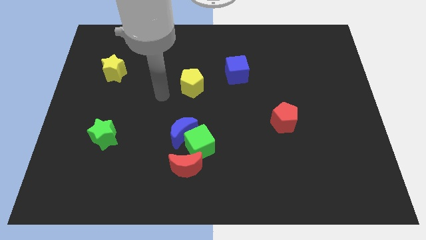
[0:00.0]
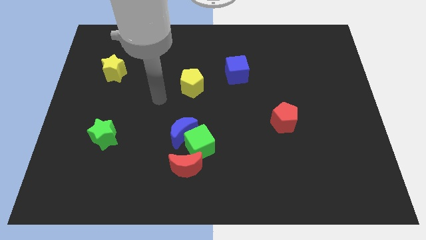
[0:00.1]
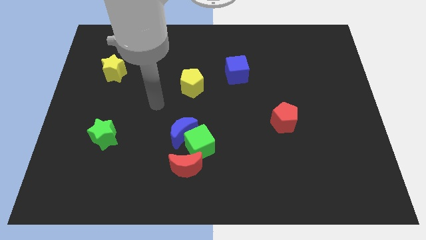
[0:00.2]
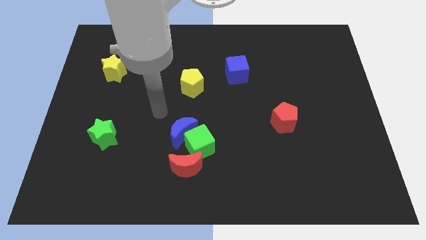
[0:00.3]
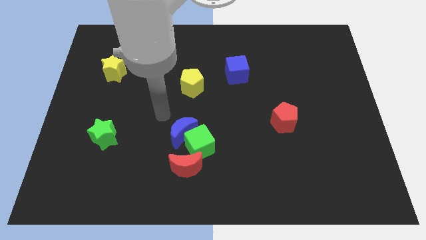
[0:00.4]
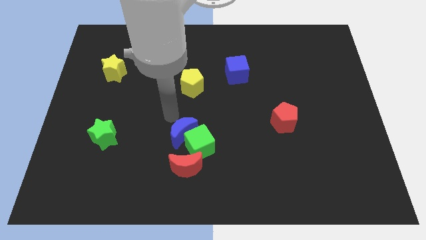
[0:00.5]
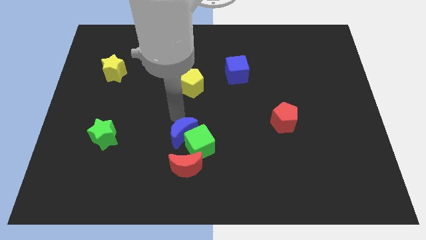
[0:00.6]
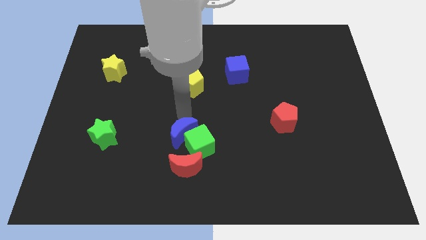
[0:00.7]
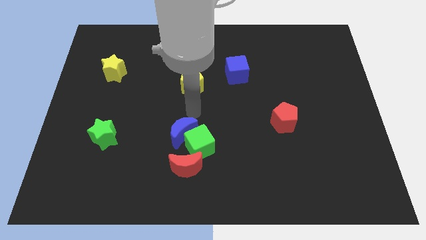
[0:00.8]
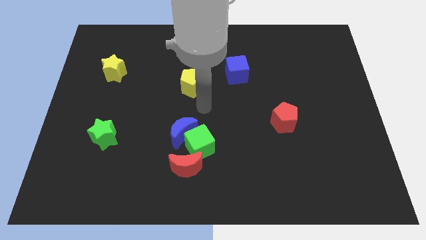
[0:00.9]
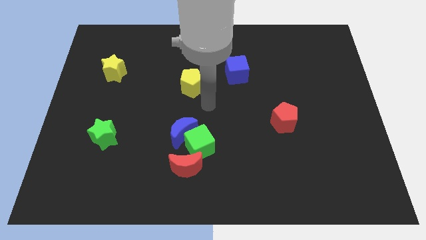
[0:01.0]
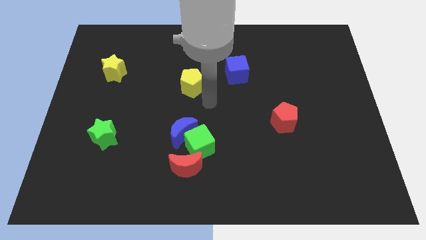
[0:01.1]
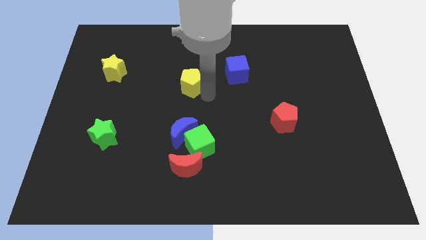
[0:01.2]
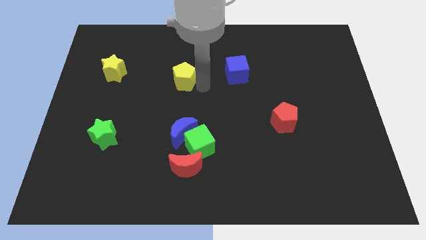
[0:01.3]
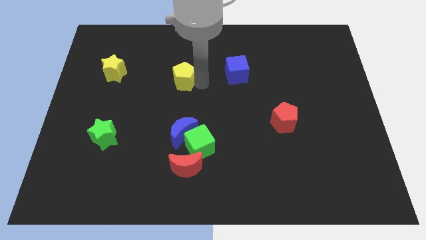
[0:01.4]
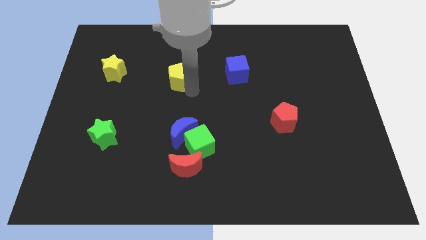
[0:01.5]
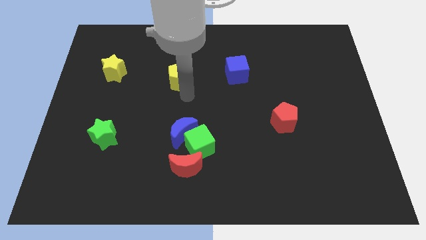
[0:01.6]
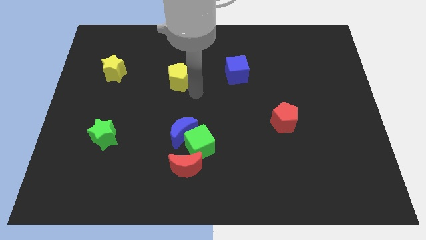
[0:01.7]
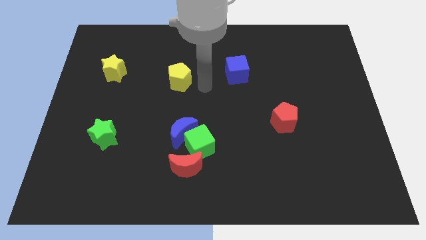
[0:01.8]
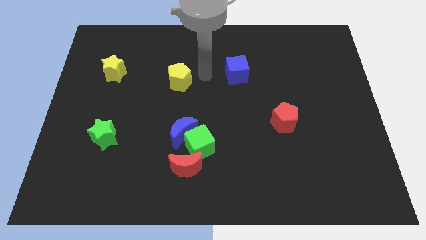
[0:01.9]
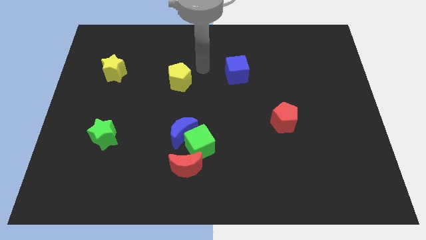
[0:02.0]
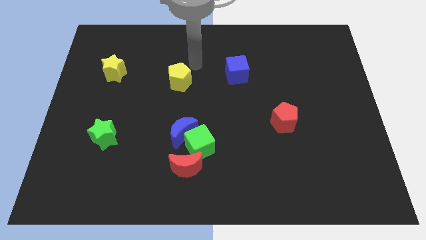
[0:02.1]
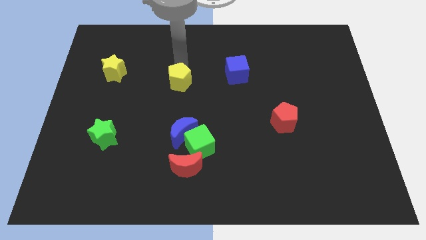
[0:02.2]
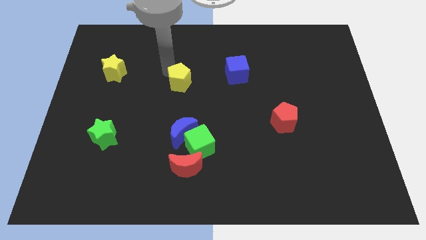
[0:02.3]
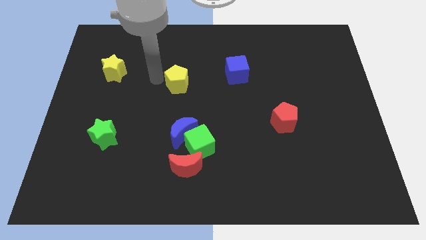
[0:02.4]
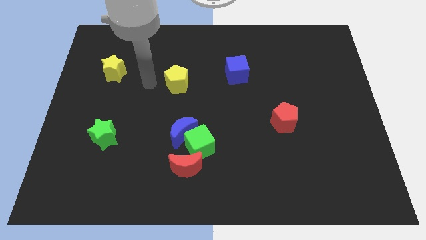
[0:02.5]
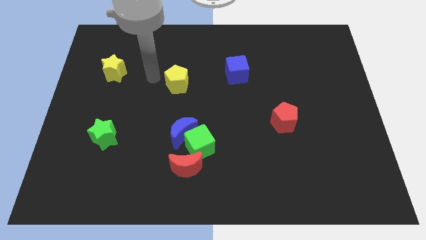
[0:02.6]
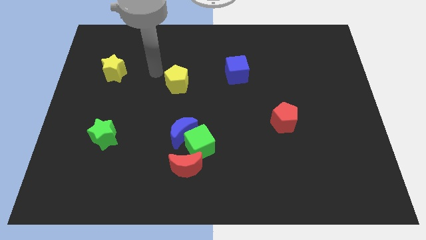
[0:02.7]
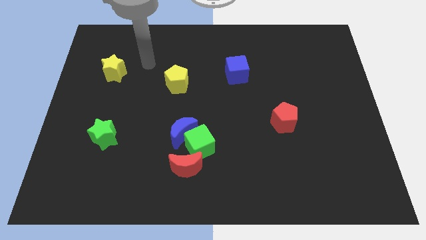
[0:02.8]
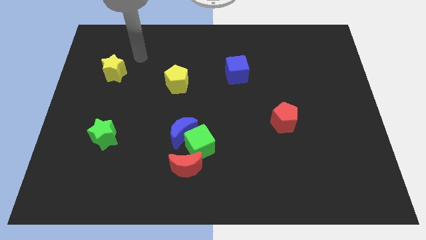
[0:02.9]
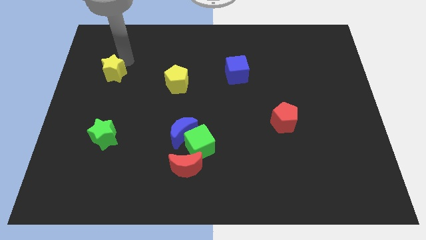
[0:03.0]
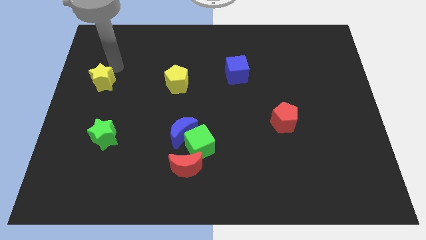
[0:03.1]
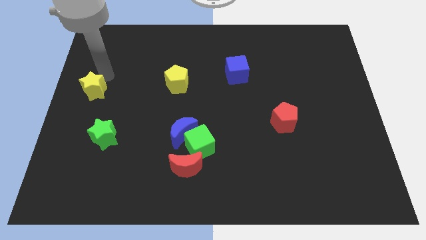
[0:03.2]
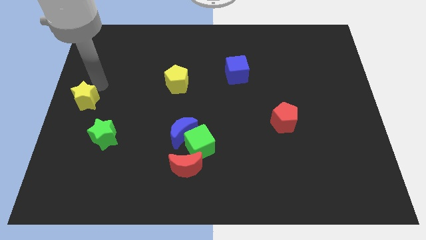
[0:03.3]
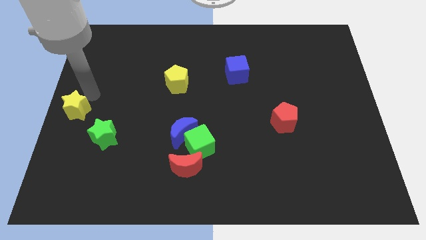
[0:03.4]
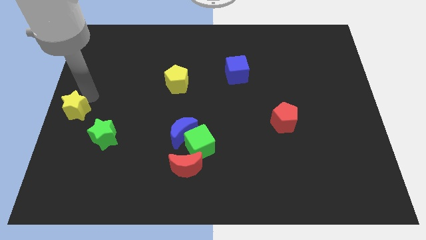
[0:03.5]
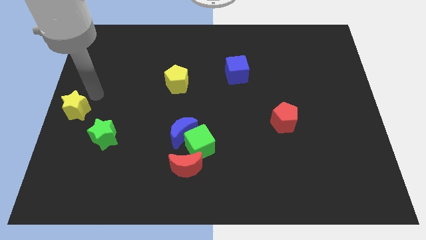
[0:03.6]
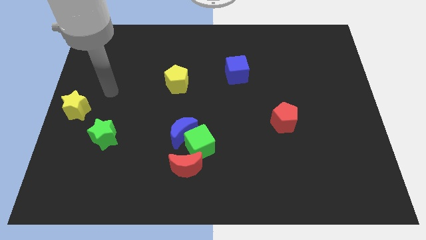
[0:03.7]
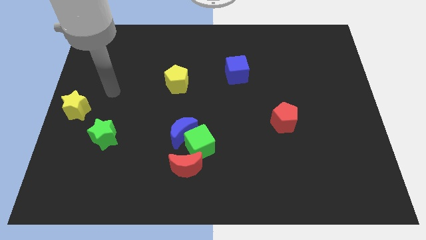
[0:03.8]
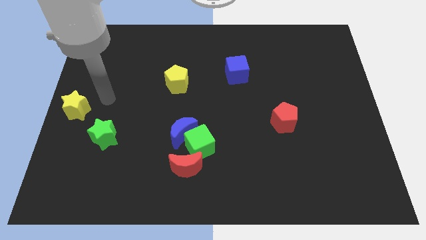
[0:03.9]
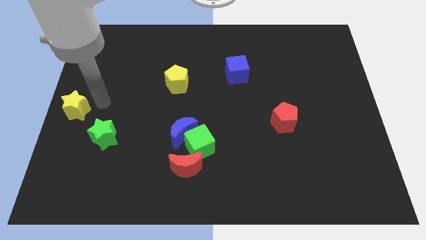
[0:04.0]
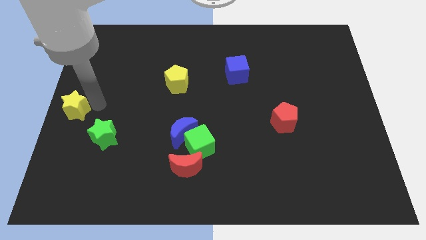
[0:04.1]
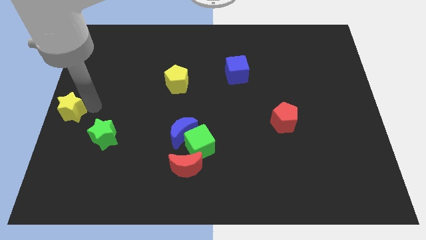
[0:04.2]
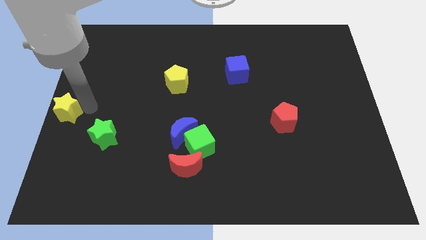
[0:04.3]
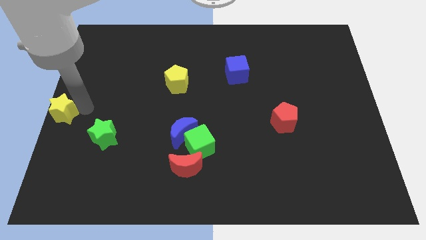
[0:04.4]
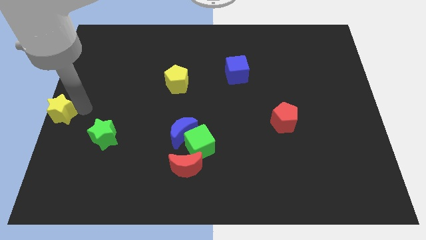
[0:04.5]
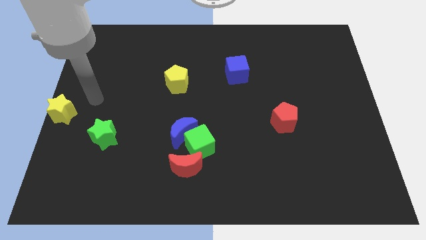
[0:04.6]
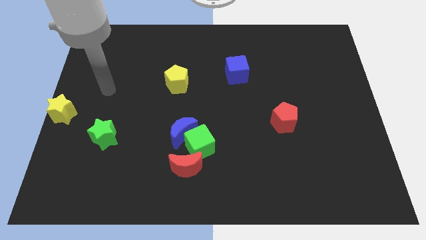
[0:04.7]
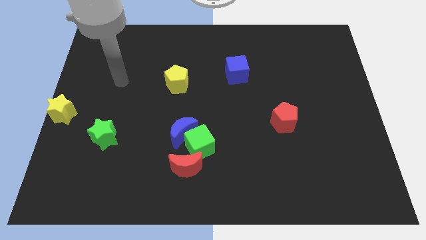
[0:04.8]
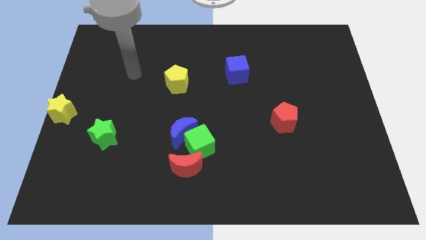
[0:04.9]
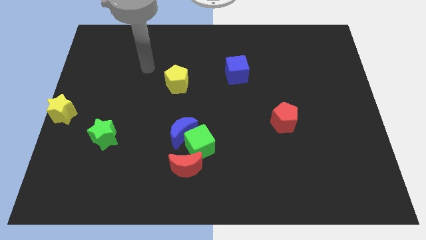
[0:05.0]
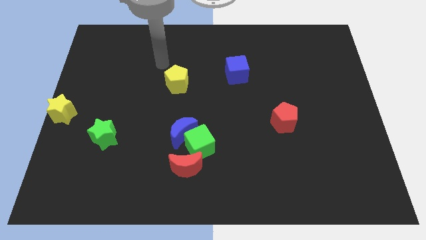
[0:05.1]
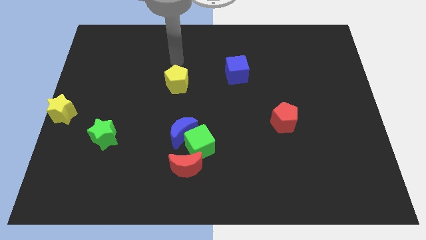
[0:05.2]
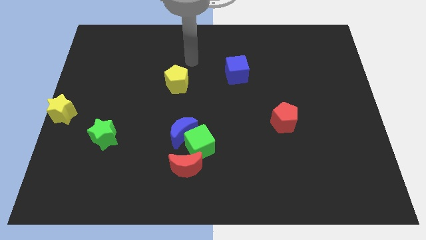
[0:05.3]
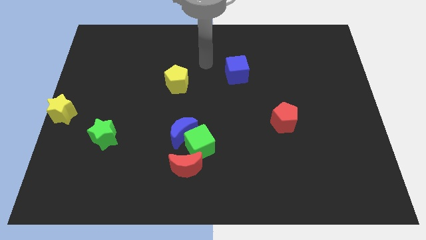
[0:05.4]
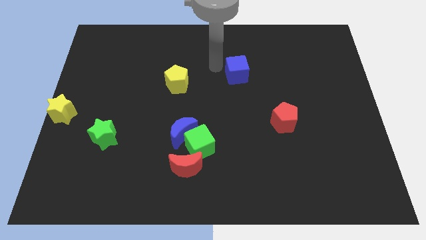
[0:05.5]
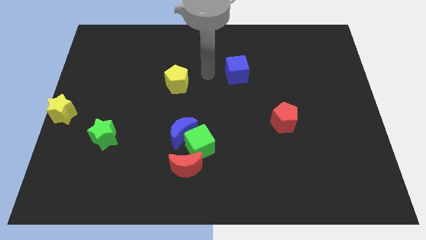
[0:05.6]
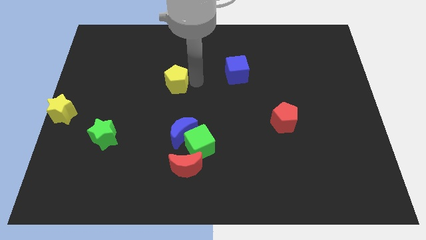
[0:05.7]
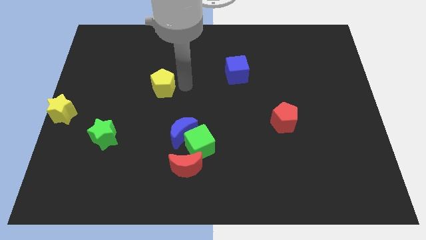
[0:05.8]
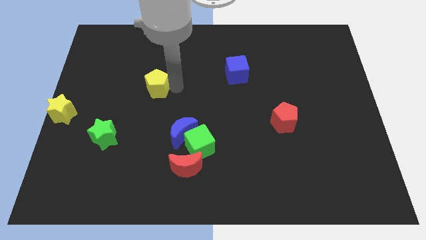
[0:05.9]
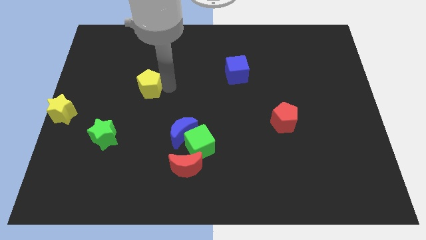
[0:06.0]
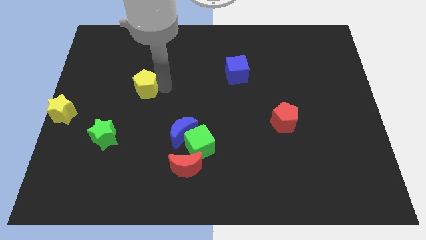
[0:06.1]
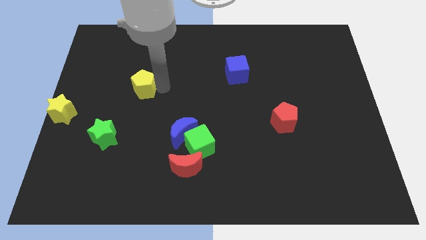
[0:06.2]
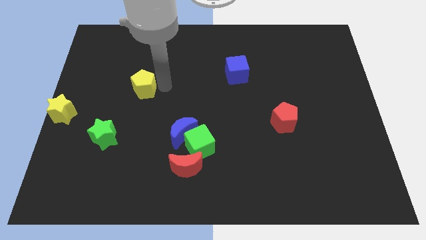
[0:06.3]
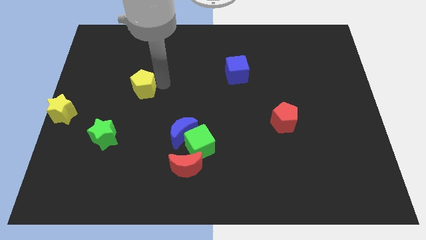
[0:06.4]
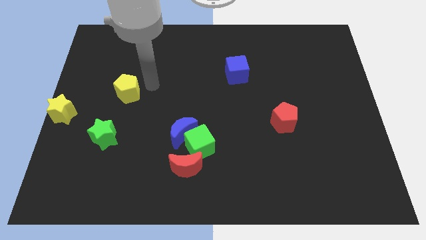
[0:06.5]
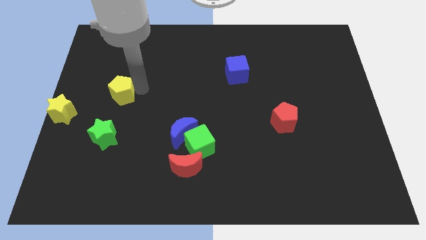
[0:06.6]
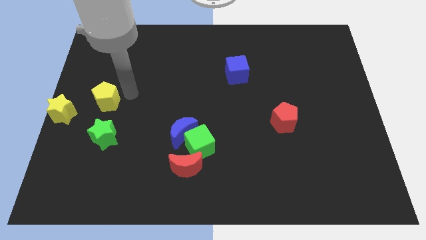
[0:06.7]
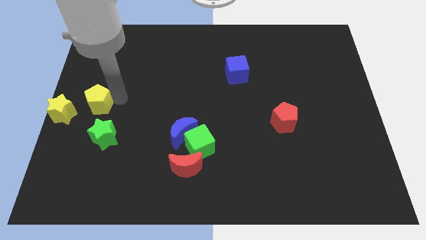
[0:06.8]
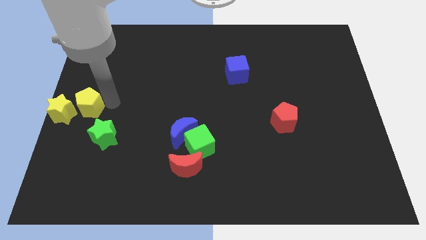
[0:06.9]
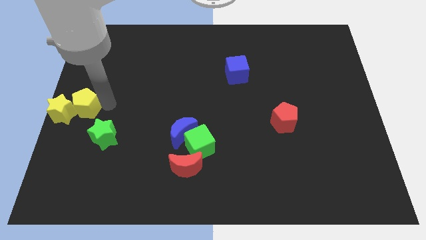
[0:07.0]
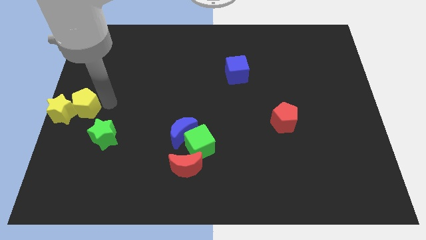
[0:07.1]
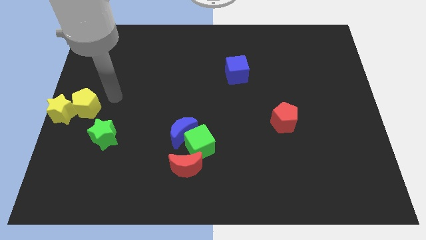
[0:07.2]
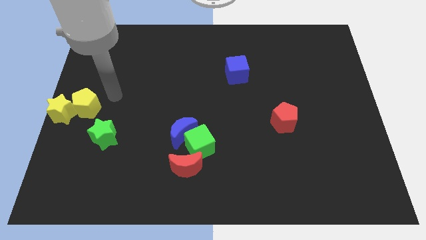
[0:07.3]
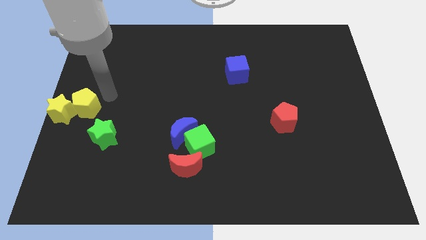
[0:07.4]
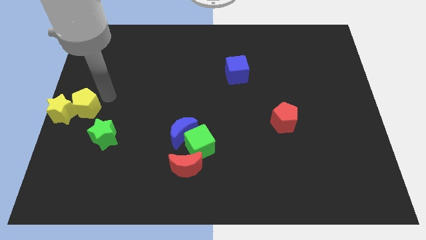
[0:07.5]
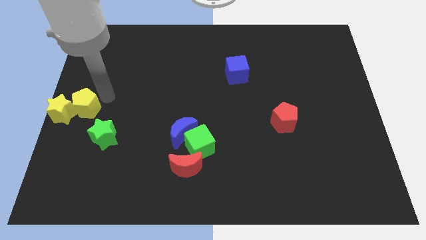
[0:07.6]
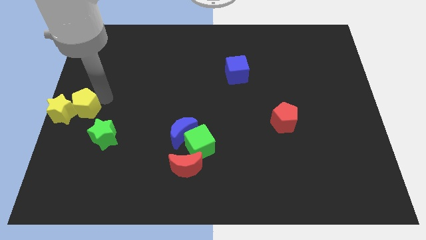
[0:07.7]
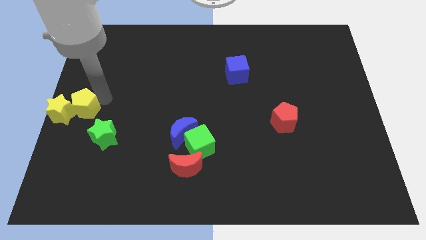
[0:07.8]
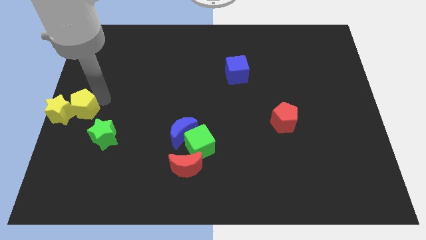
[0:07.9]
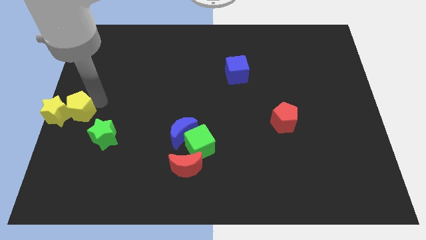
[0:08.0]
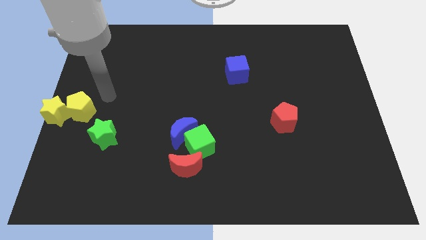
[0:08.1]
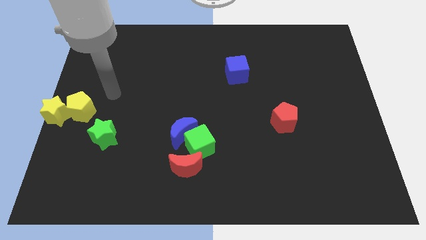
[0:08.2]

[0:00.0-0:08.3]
make a line with yellow star and yellow pentagon horizontally towards the left side of the board

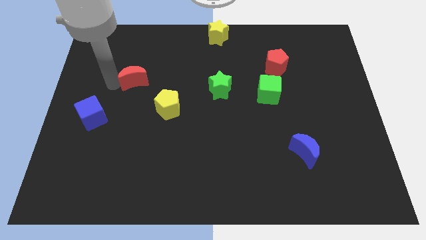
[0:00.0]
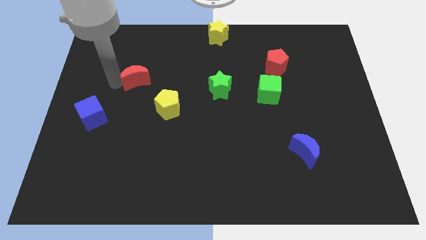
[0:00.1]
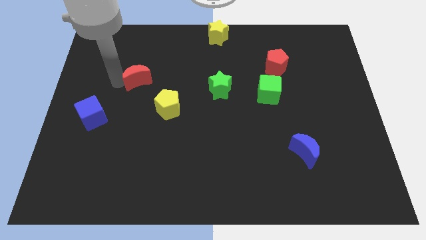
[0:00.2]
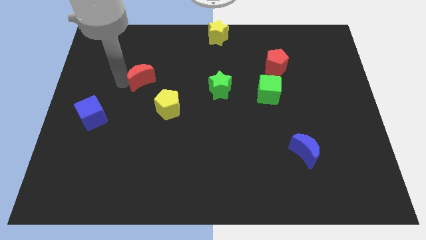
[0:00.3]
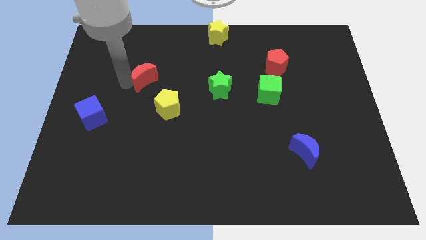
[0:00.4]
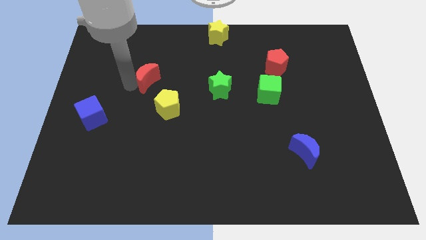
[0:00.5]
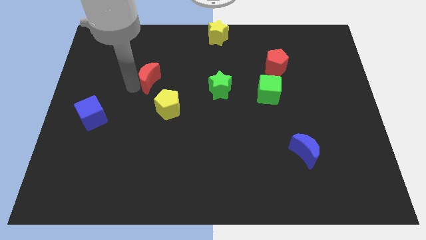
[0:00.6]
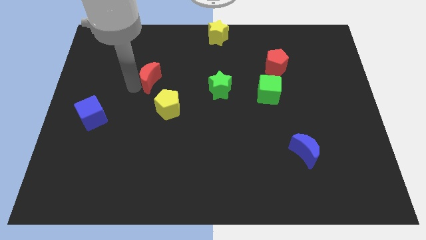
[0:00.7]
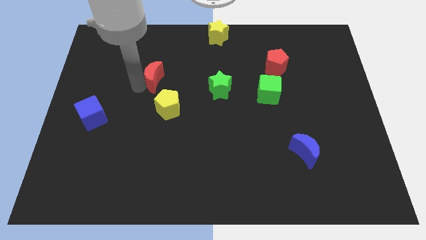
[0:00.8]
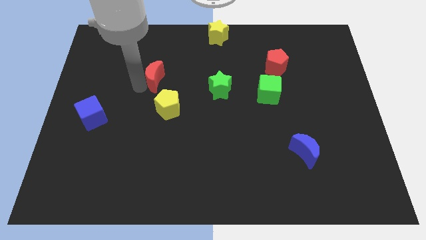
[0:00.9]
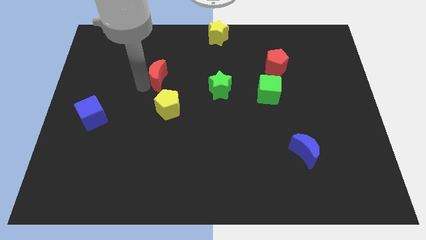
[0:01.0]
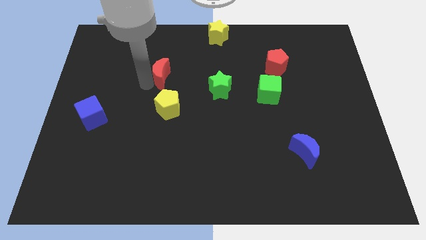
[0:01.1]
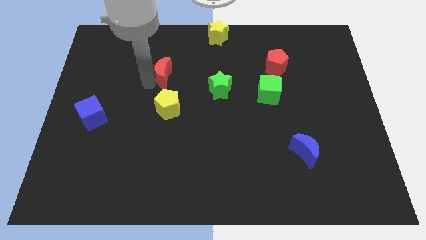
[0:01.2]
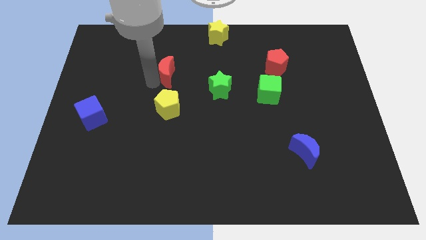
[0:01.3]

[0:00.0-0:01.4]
move the red crescent above the yellow pentagon
